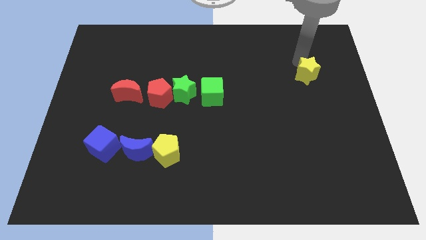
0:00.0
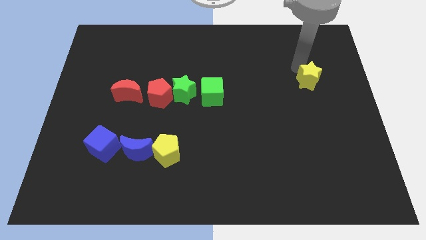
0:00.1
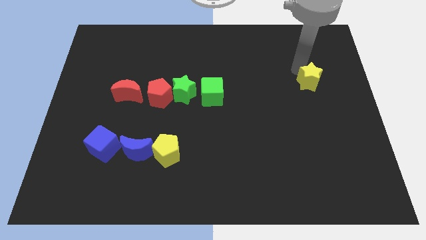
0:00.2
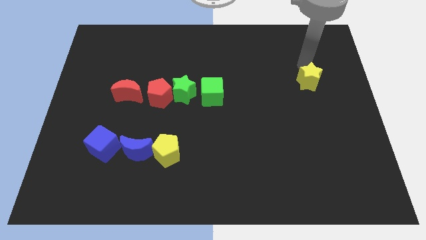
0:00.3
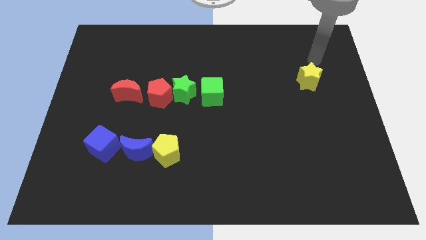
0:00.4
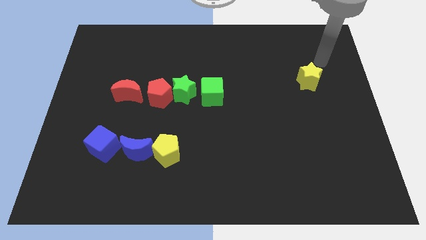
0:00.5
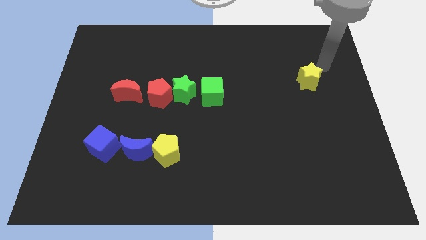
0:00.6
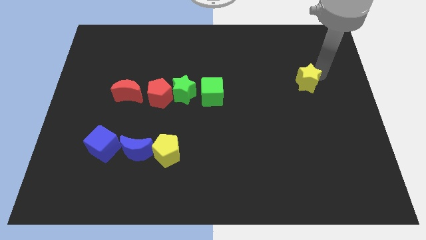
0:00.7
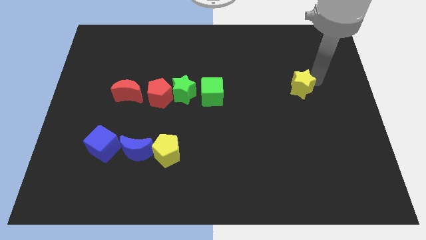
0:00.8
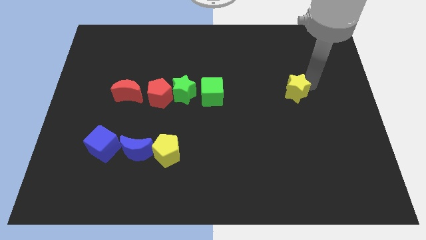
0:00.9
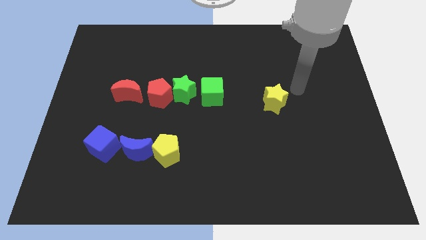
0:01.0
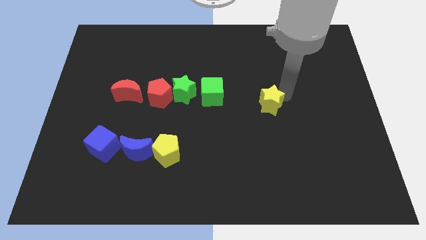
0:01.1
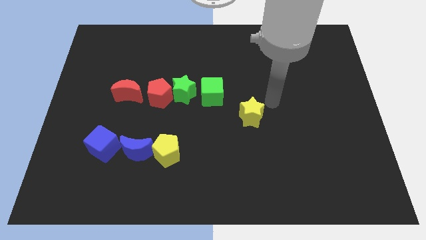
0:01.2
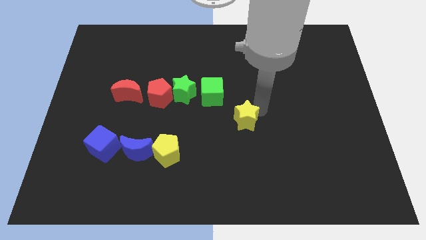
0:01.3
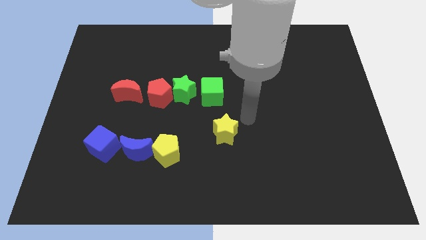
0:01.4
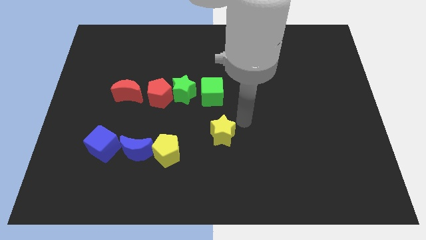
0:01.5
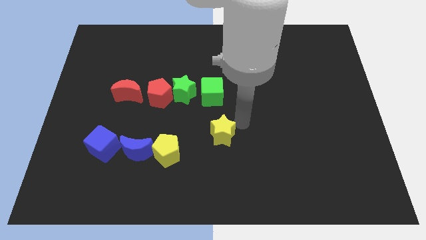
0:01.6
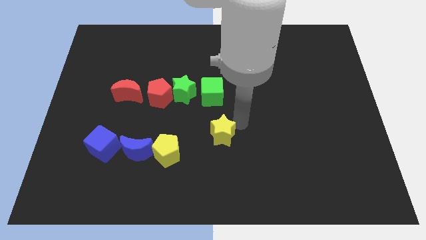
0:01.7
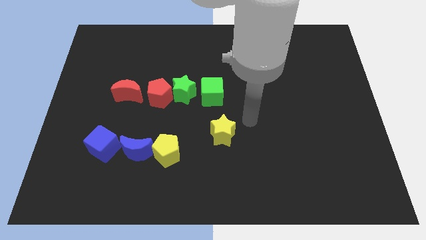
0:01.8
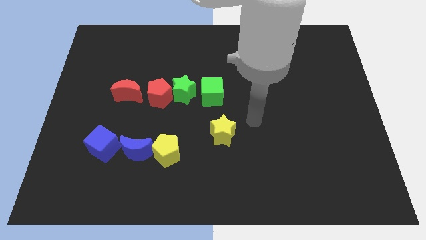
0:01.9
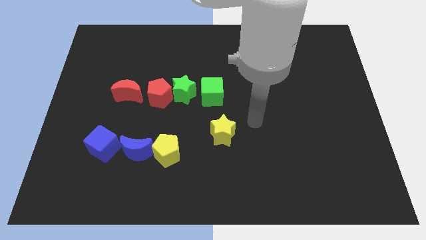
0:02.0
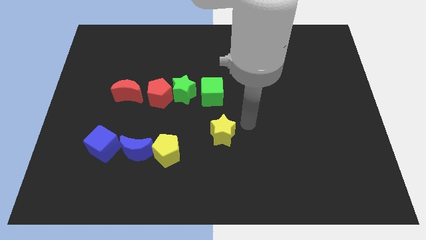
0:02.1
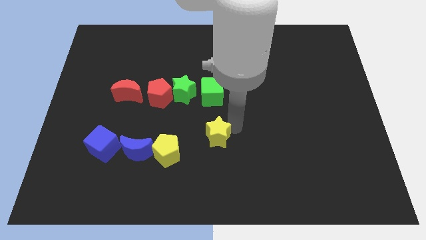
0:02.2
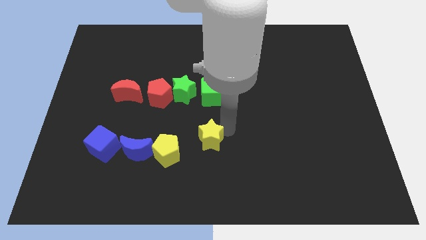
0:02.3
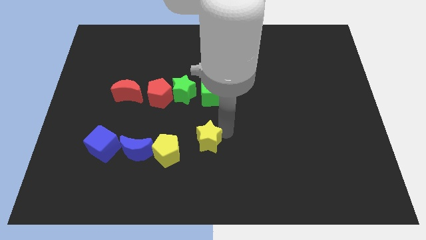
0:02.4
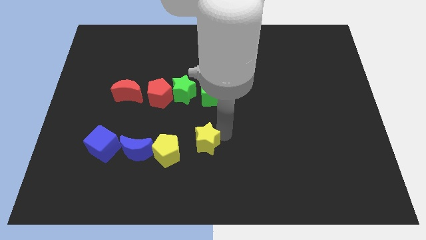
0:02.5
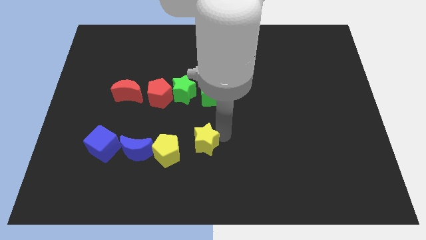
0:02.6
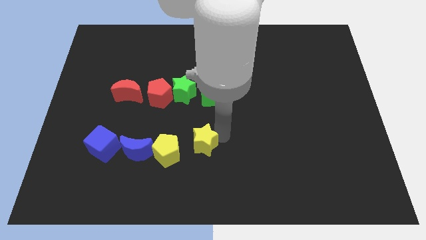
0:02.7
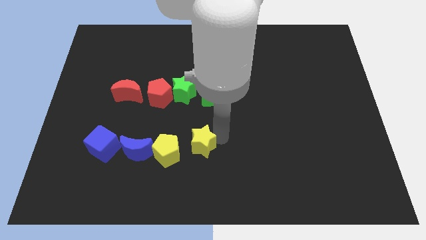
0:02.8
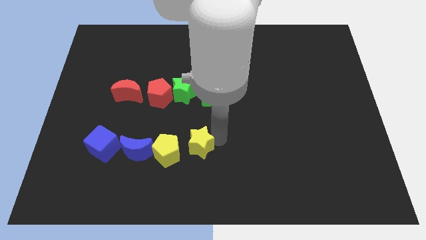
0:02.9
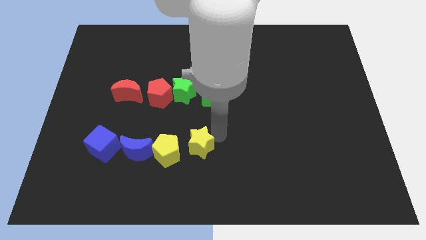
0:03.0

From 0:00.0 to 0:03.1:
push yellow star towards yellow pentagon

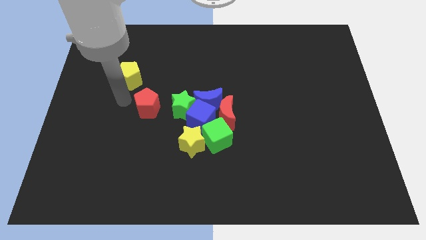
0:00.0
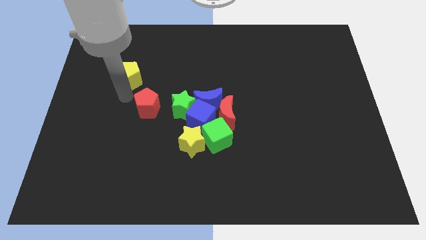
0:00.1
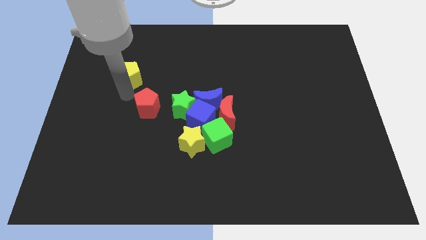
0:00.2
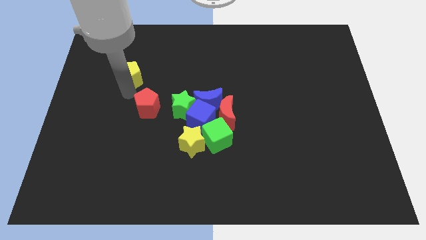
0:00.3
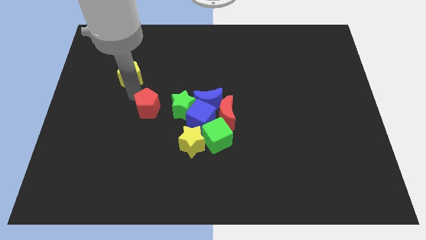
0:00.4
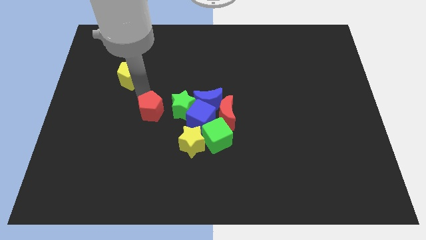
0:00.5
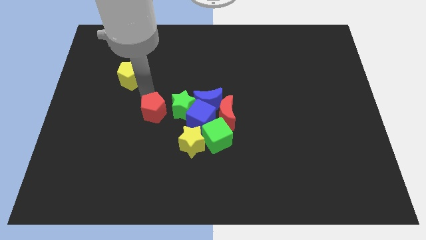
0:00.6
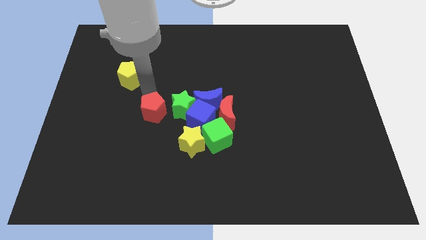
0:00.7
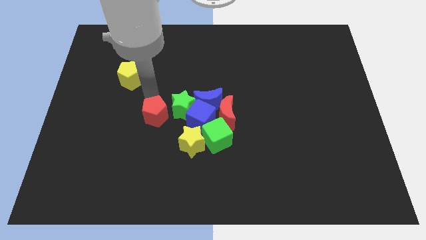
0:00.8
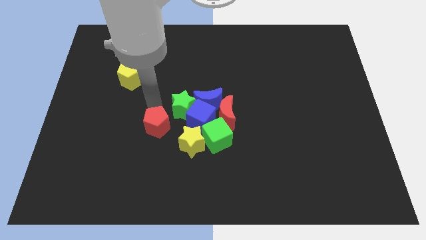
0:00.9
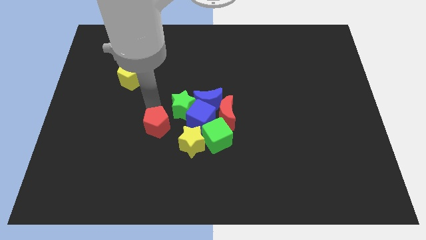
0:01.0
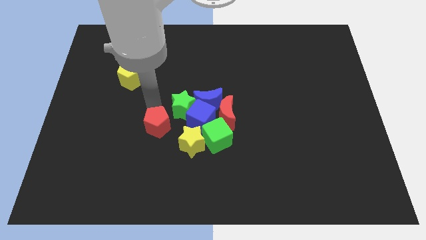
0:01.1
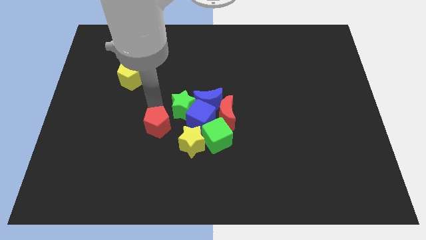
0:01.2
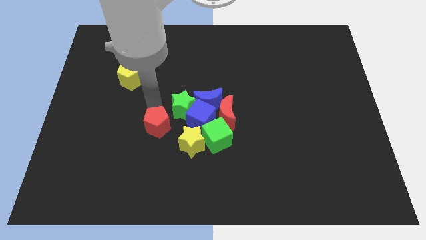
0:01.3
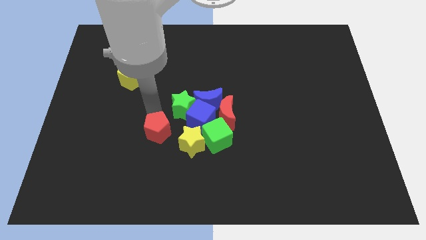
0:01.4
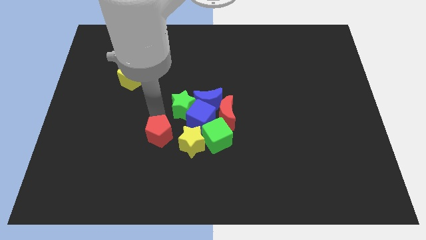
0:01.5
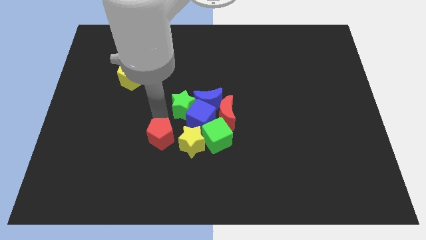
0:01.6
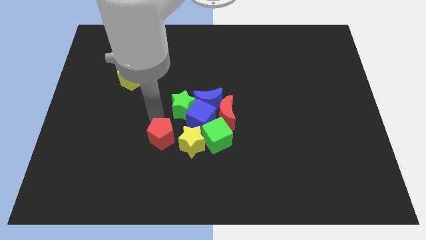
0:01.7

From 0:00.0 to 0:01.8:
push red pentagon to the left of yellow star

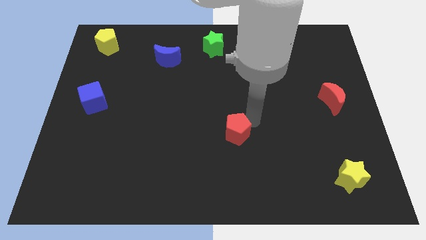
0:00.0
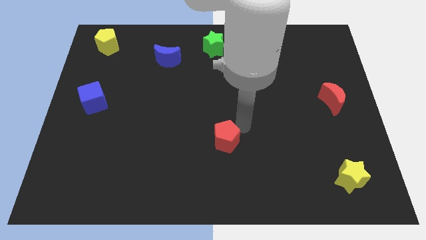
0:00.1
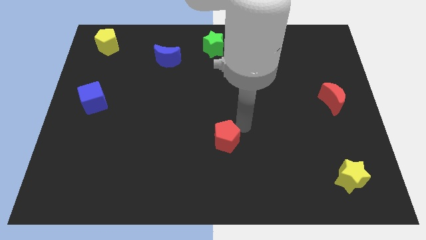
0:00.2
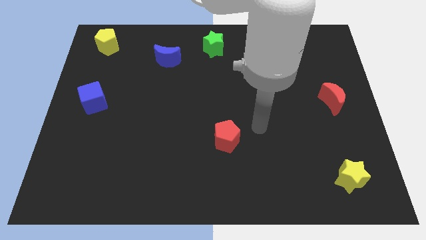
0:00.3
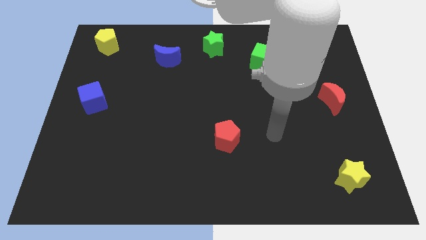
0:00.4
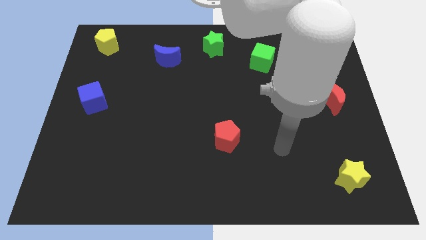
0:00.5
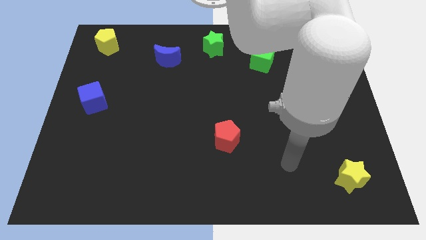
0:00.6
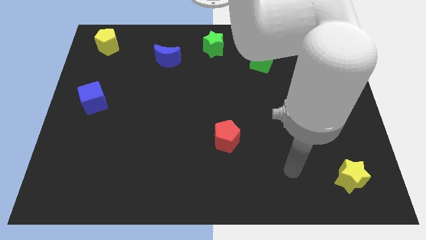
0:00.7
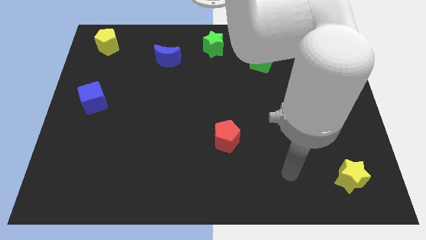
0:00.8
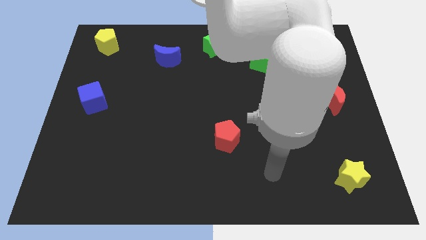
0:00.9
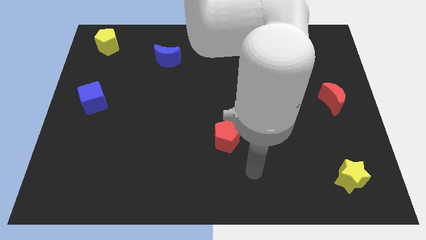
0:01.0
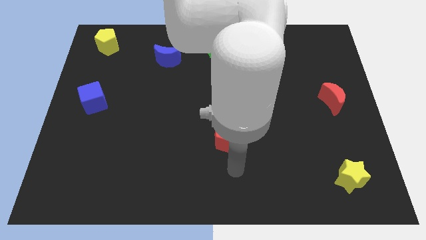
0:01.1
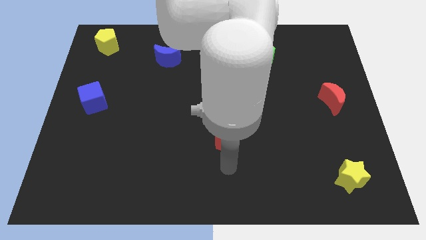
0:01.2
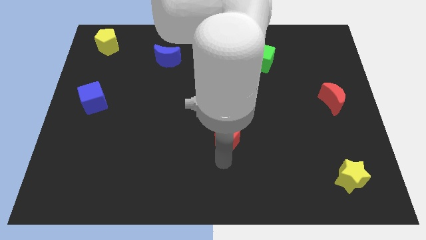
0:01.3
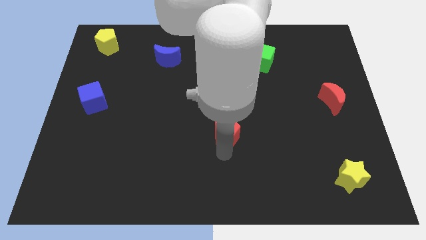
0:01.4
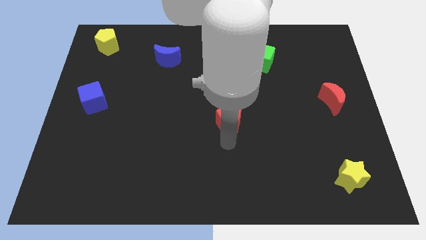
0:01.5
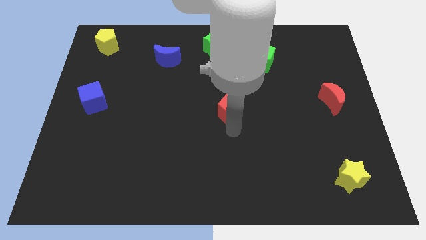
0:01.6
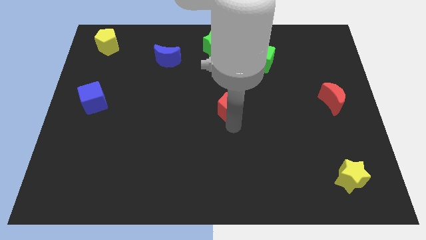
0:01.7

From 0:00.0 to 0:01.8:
slide the red pentagon upwards

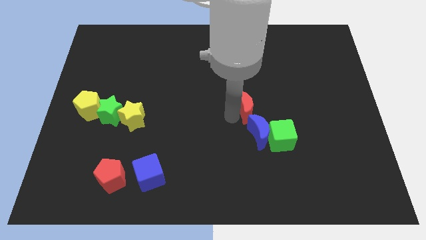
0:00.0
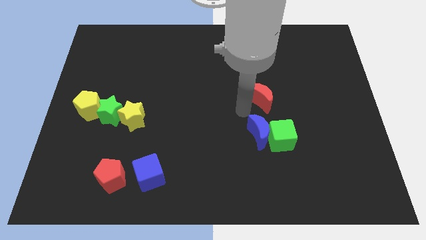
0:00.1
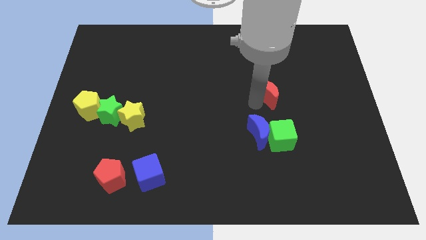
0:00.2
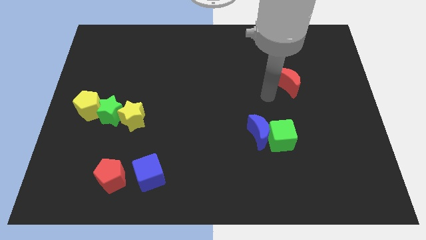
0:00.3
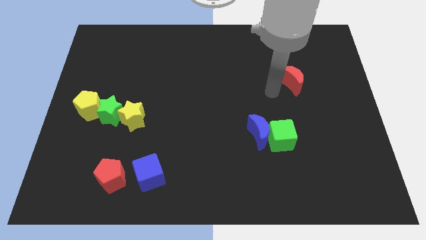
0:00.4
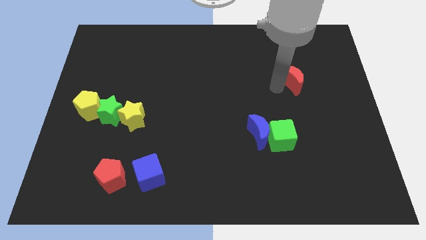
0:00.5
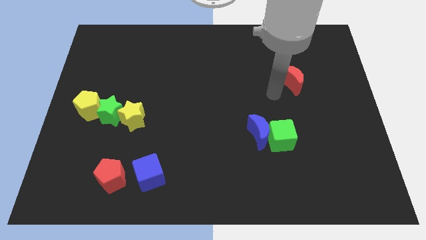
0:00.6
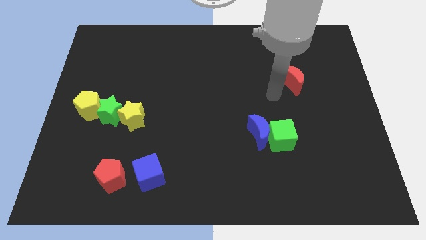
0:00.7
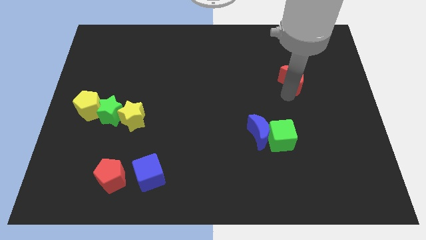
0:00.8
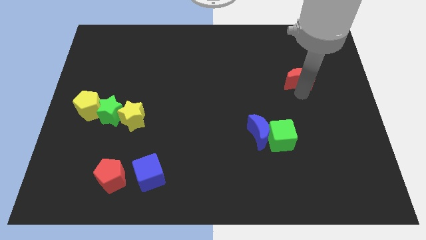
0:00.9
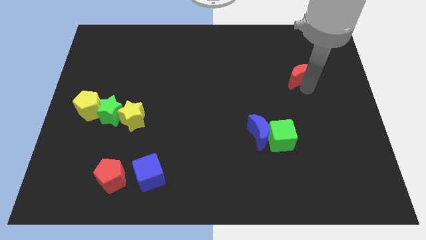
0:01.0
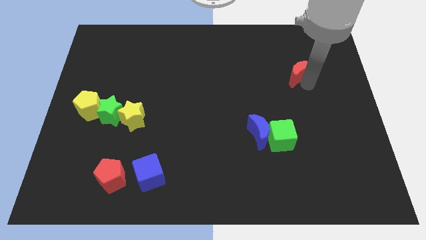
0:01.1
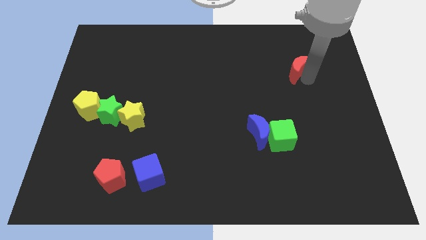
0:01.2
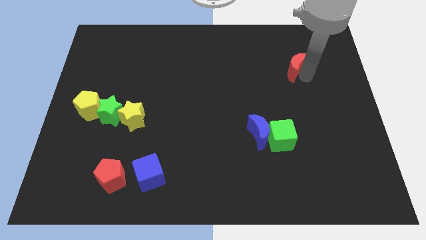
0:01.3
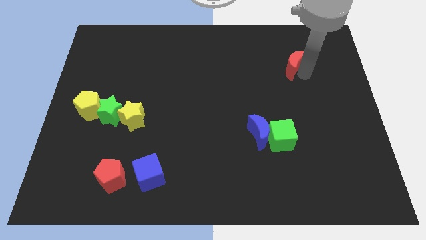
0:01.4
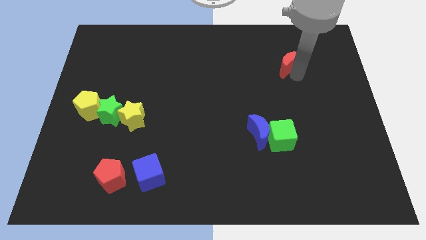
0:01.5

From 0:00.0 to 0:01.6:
drag the red moon towards the top right side of the board

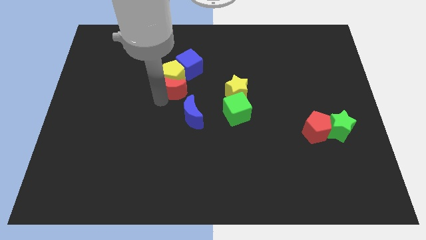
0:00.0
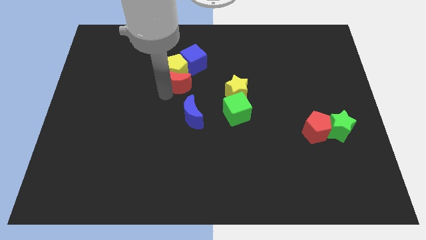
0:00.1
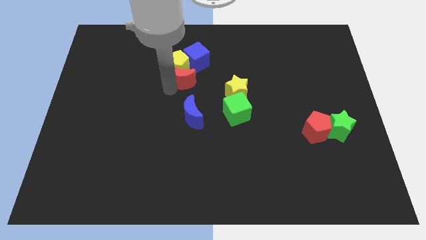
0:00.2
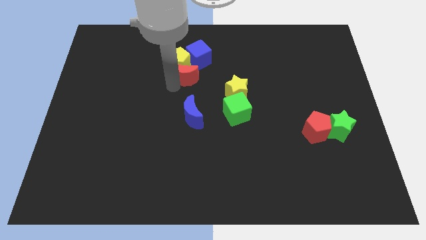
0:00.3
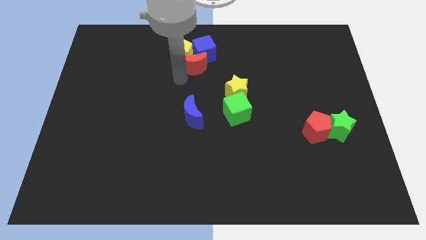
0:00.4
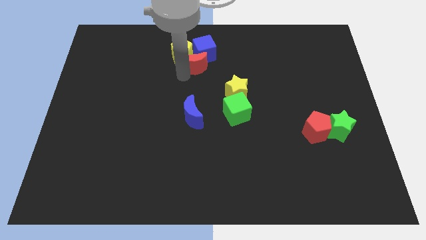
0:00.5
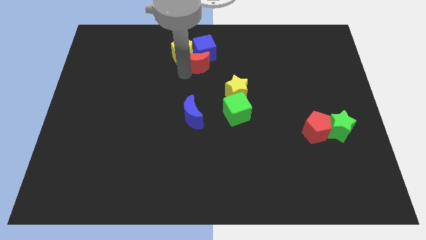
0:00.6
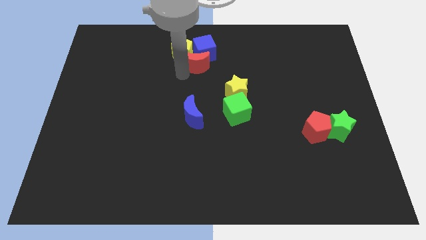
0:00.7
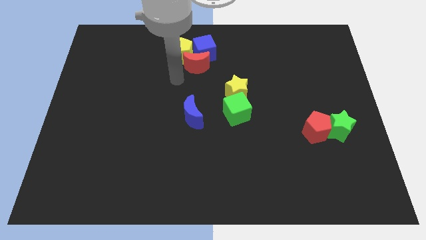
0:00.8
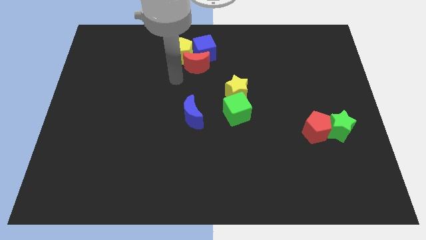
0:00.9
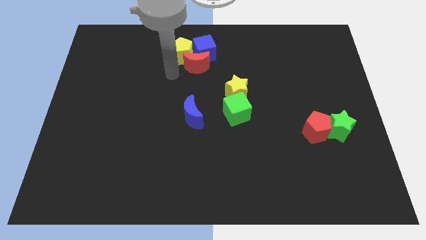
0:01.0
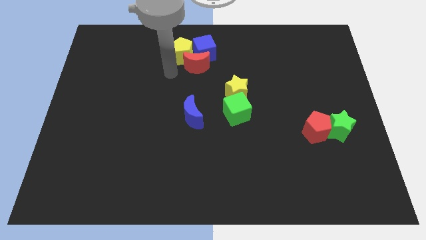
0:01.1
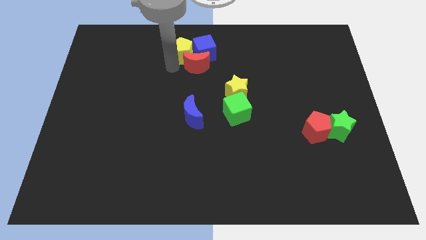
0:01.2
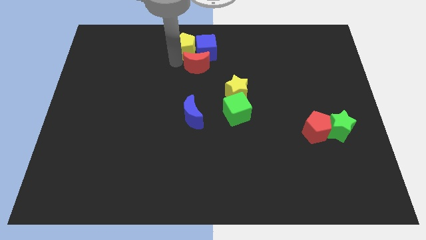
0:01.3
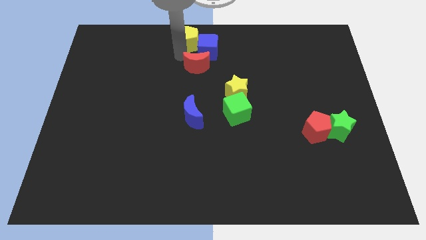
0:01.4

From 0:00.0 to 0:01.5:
place the group of blocks at the top center
